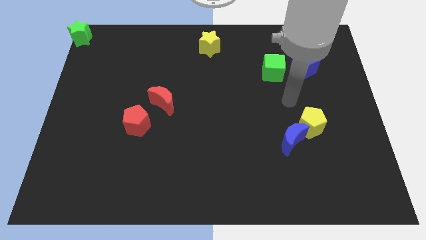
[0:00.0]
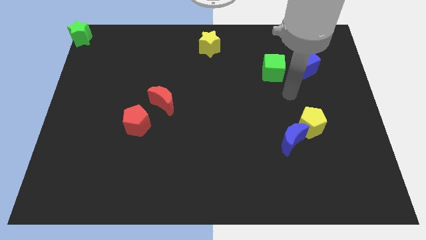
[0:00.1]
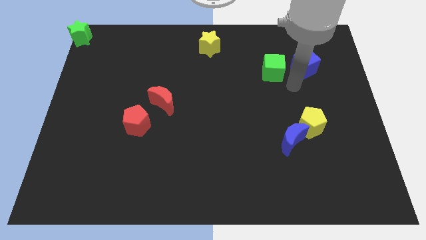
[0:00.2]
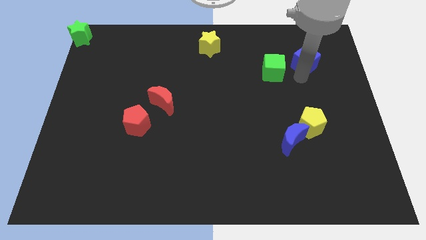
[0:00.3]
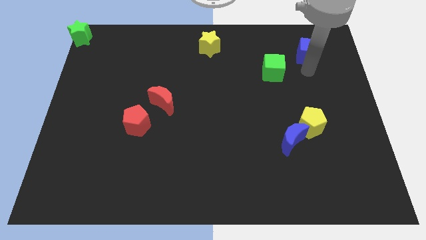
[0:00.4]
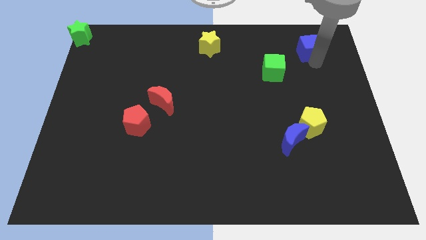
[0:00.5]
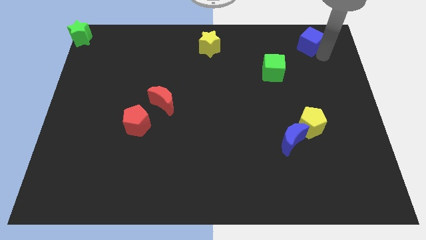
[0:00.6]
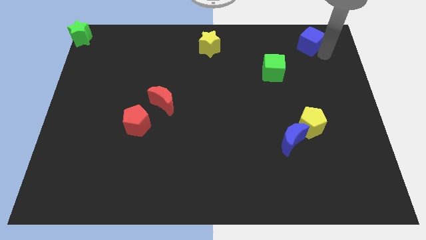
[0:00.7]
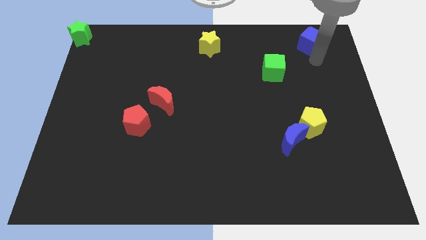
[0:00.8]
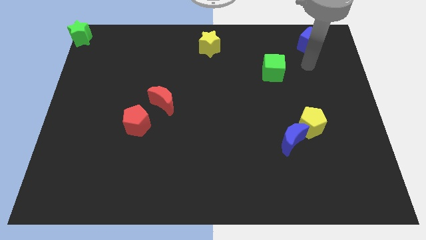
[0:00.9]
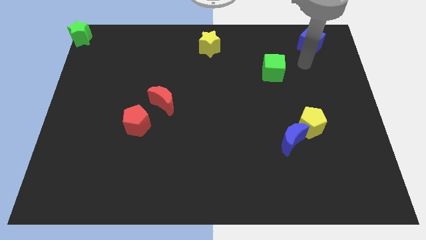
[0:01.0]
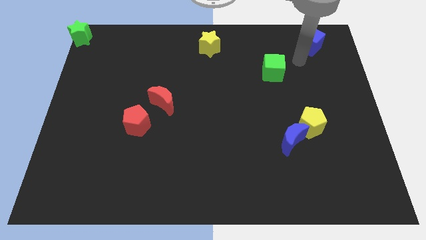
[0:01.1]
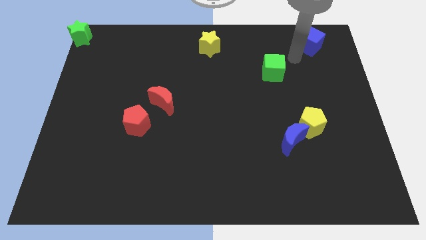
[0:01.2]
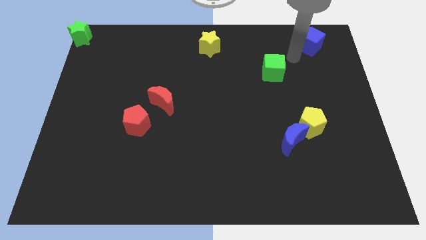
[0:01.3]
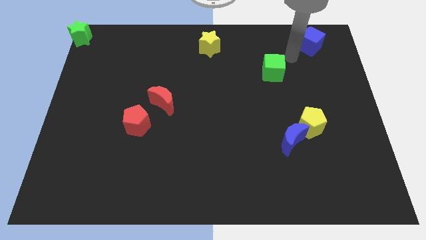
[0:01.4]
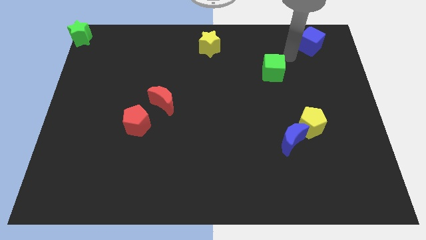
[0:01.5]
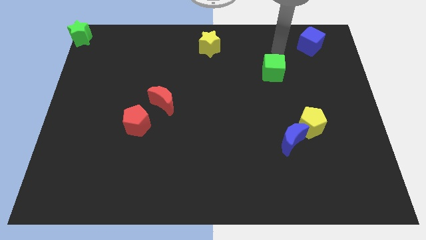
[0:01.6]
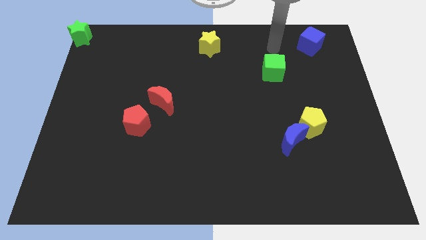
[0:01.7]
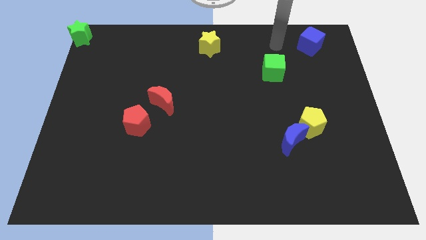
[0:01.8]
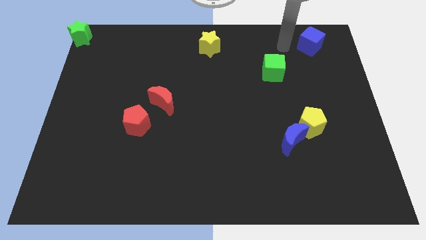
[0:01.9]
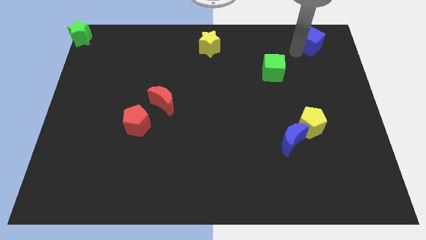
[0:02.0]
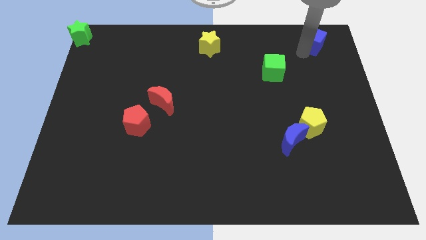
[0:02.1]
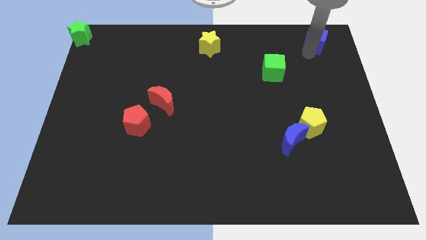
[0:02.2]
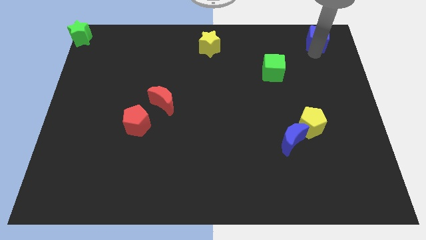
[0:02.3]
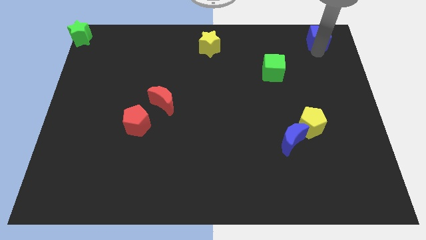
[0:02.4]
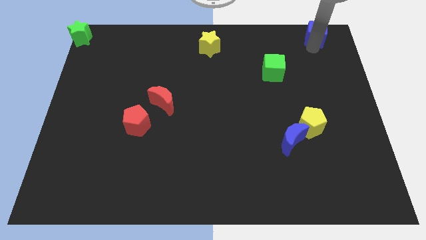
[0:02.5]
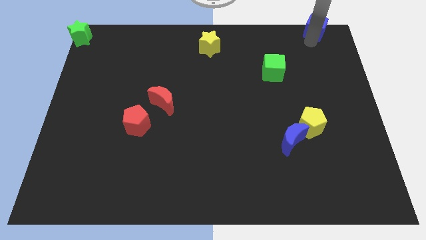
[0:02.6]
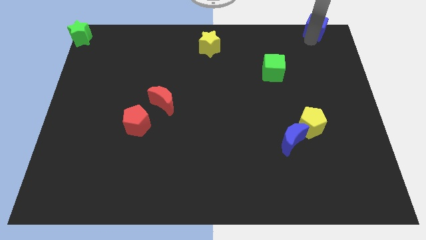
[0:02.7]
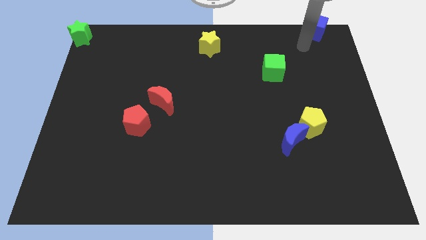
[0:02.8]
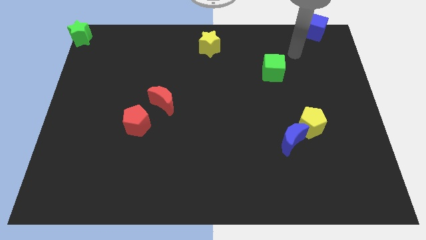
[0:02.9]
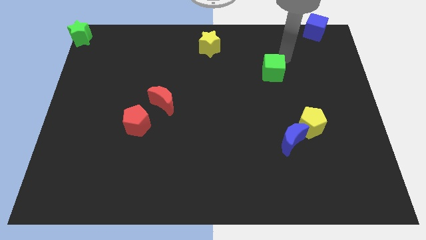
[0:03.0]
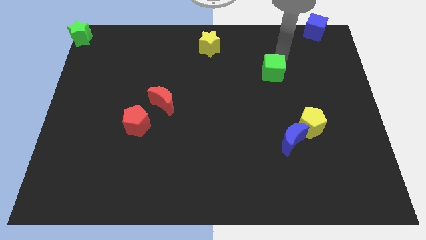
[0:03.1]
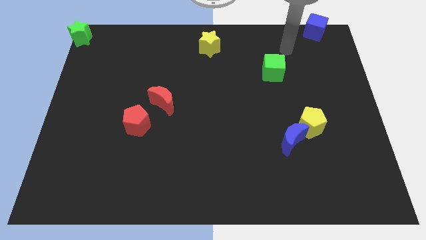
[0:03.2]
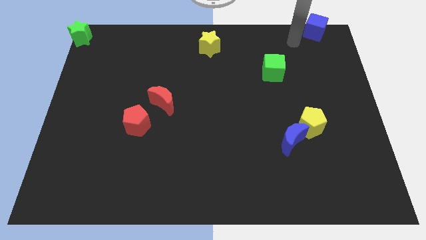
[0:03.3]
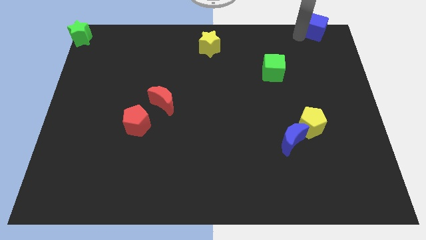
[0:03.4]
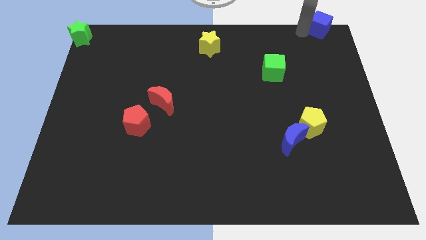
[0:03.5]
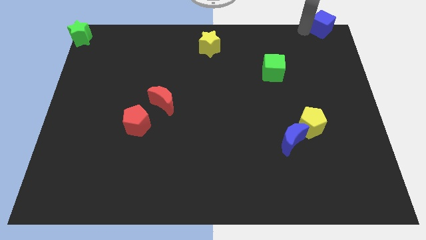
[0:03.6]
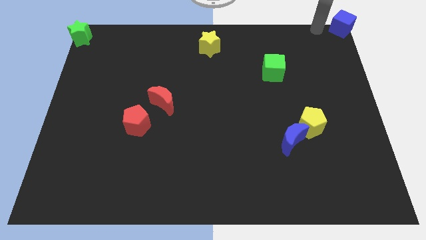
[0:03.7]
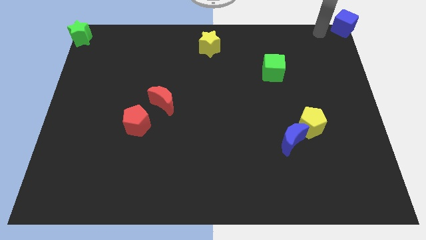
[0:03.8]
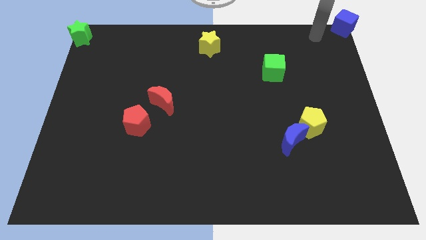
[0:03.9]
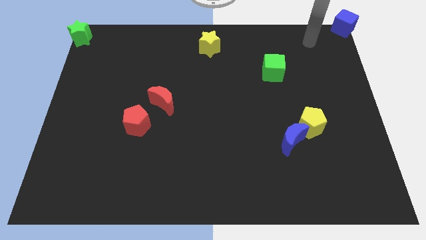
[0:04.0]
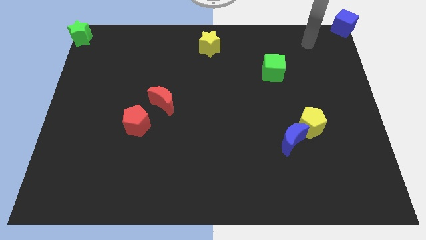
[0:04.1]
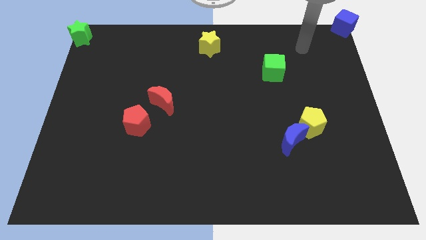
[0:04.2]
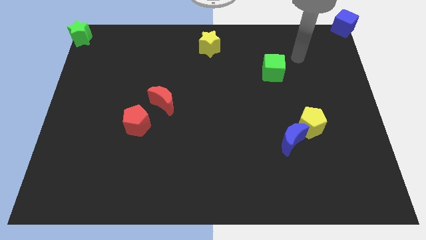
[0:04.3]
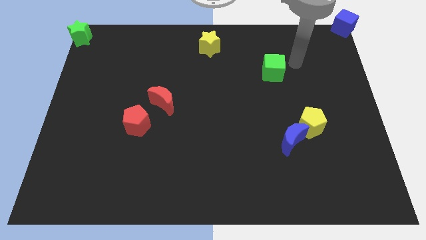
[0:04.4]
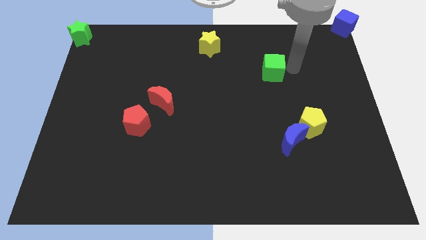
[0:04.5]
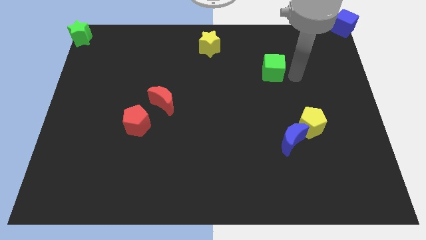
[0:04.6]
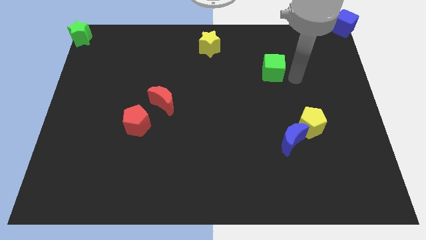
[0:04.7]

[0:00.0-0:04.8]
move the blue cube to the top right corner

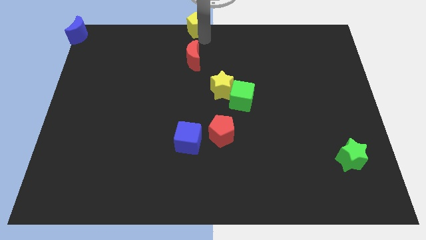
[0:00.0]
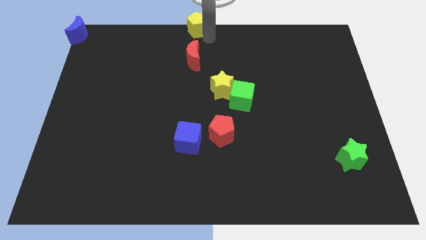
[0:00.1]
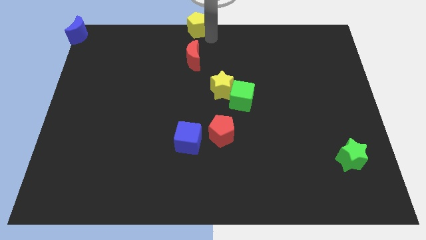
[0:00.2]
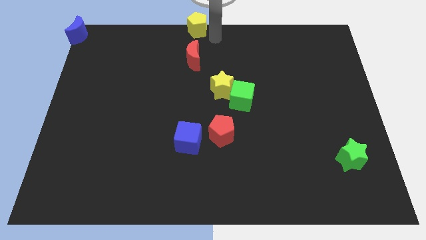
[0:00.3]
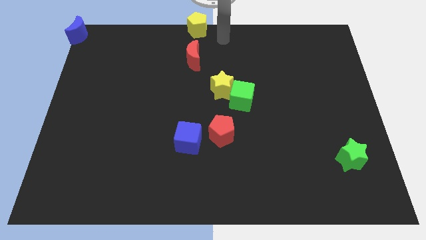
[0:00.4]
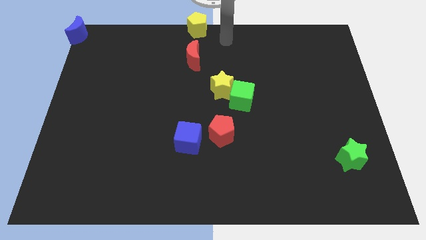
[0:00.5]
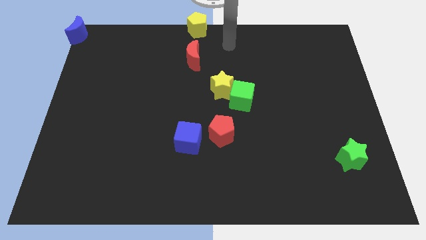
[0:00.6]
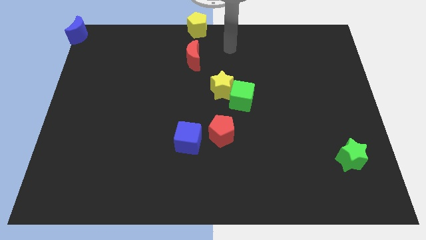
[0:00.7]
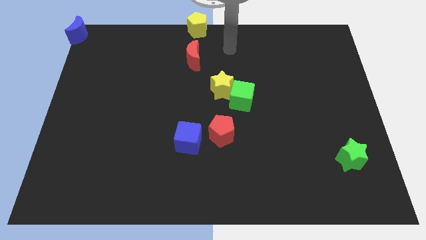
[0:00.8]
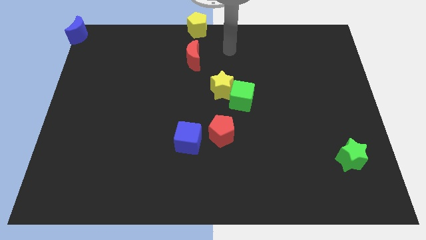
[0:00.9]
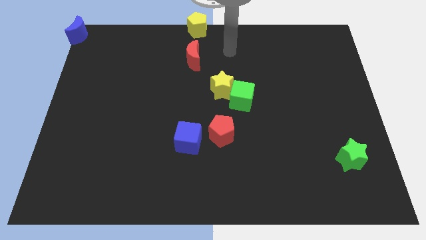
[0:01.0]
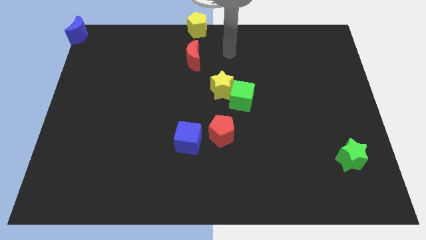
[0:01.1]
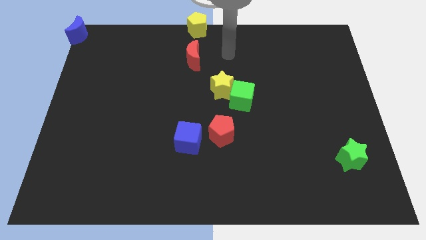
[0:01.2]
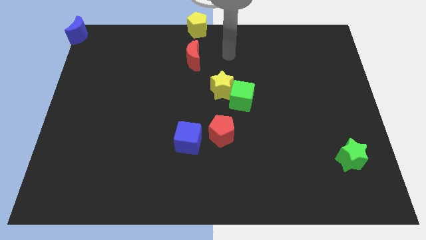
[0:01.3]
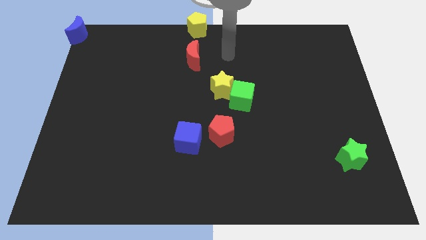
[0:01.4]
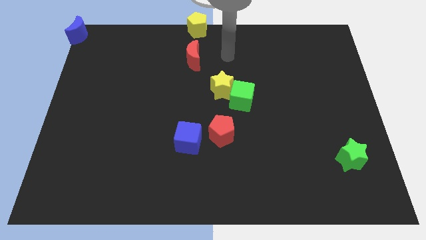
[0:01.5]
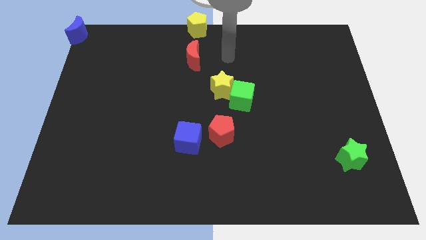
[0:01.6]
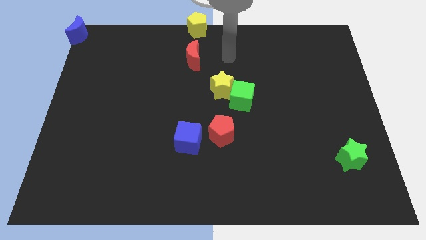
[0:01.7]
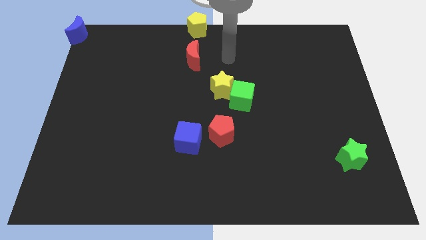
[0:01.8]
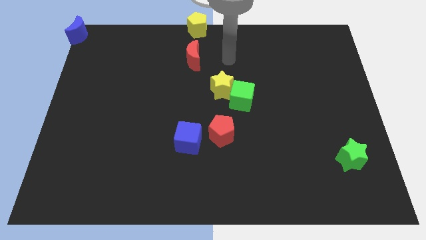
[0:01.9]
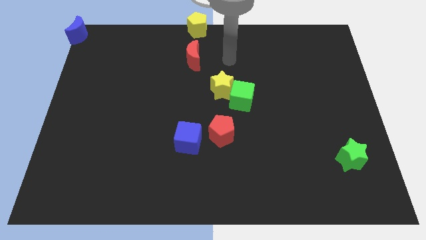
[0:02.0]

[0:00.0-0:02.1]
push your hand at the right of the red crescent

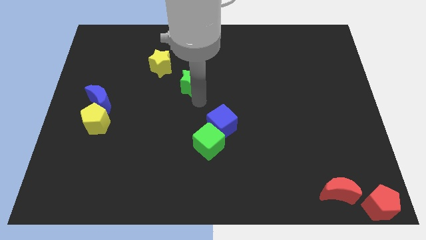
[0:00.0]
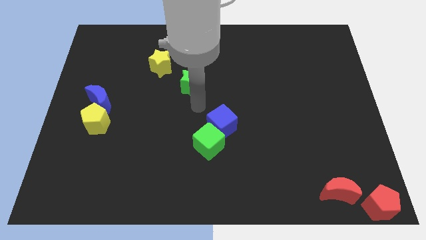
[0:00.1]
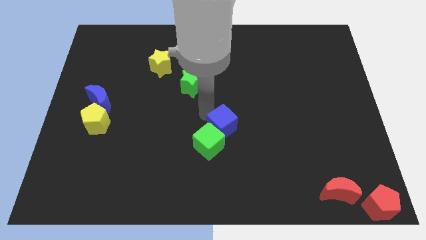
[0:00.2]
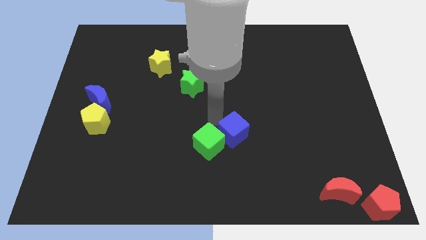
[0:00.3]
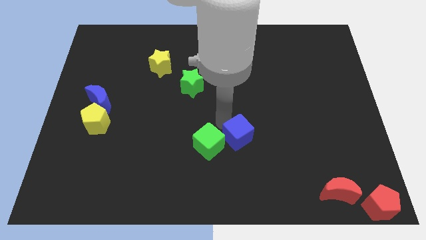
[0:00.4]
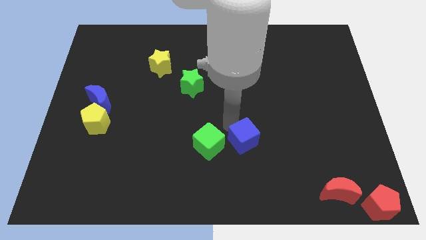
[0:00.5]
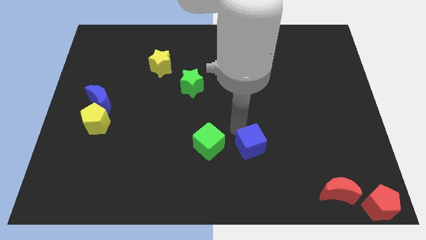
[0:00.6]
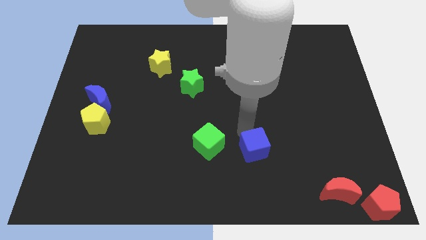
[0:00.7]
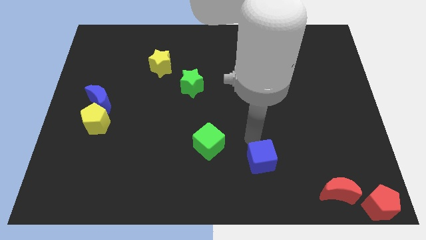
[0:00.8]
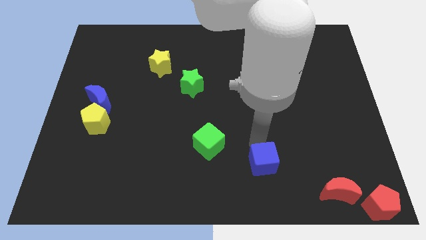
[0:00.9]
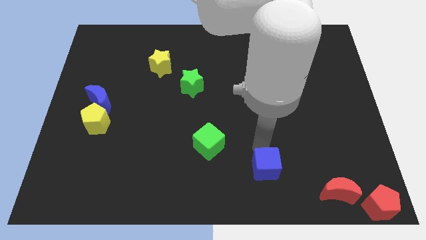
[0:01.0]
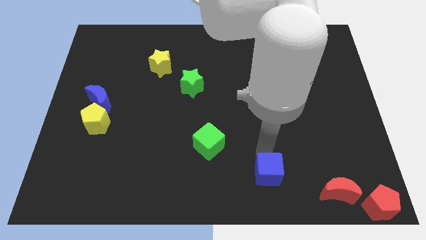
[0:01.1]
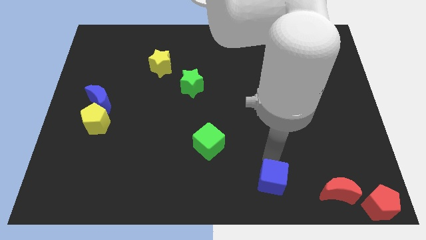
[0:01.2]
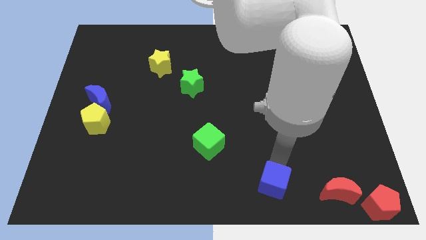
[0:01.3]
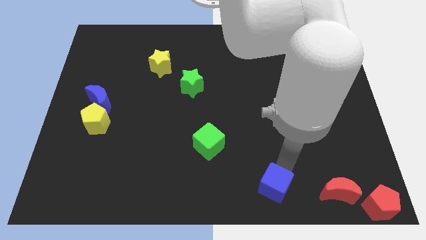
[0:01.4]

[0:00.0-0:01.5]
separate the blue cube from the green cube

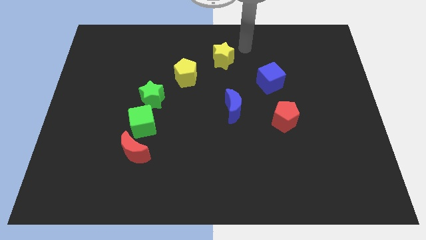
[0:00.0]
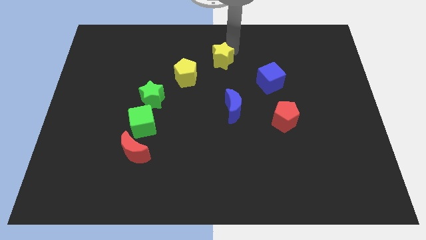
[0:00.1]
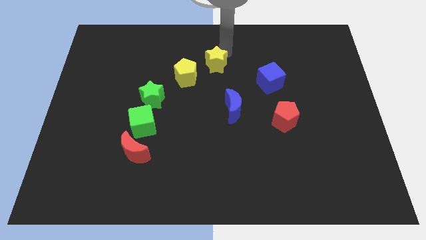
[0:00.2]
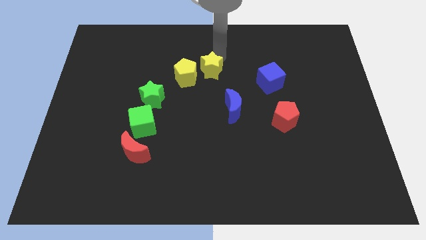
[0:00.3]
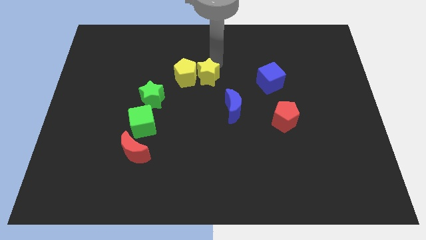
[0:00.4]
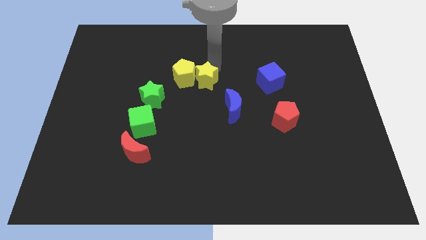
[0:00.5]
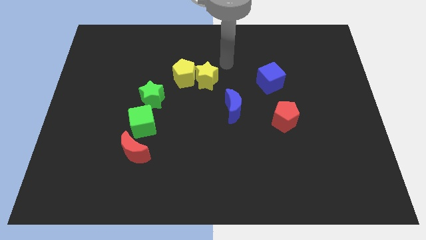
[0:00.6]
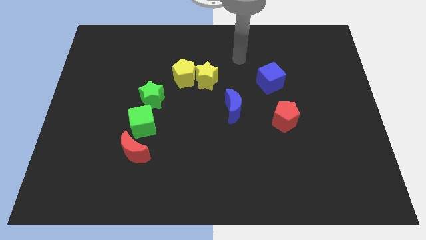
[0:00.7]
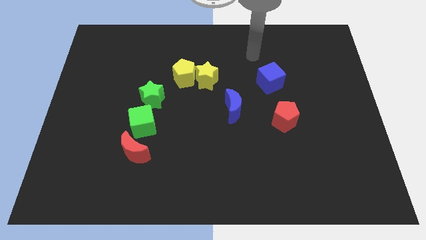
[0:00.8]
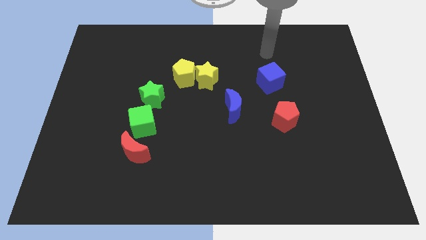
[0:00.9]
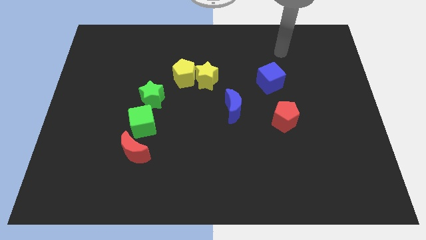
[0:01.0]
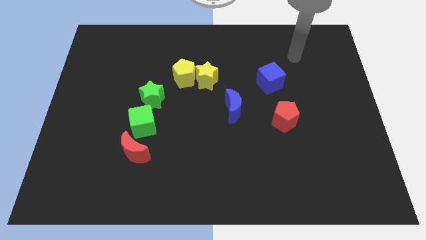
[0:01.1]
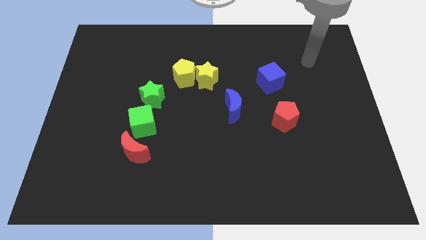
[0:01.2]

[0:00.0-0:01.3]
slide the yellow star into the yellow pentagon
